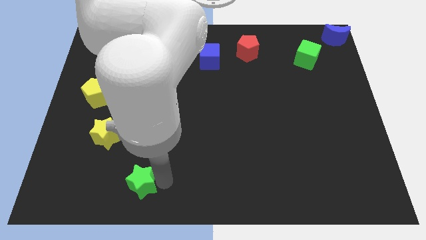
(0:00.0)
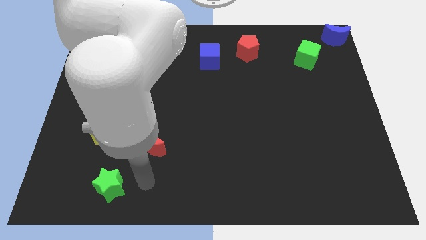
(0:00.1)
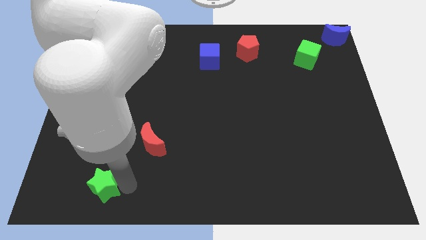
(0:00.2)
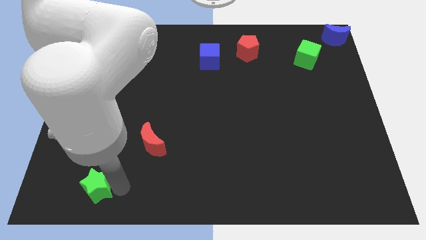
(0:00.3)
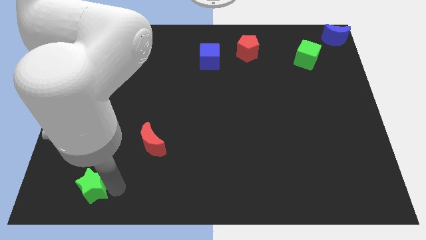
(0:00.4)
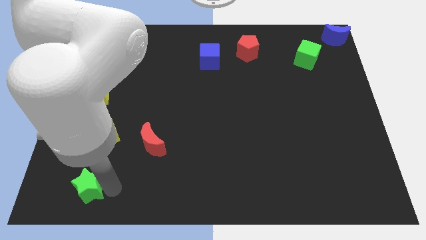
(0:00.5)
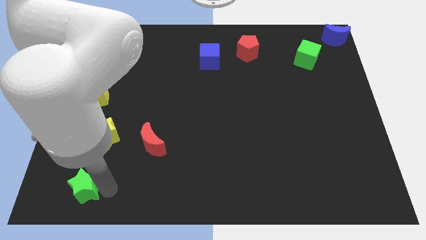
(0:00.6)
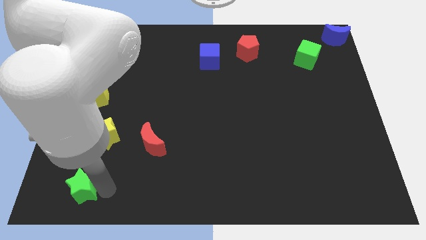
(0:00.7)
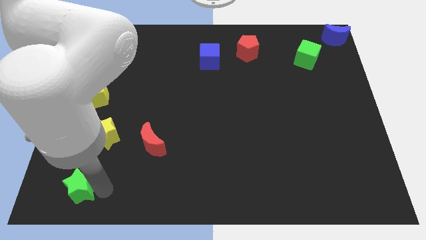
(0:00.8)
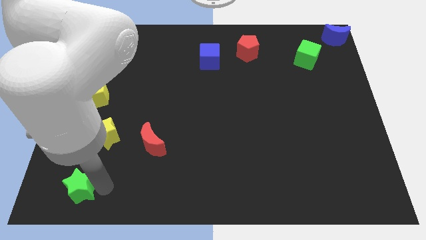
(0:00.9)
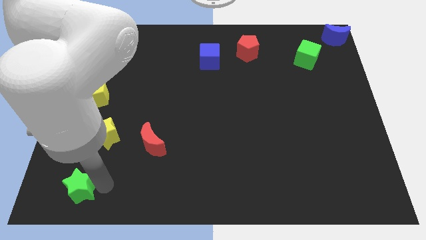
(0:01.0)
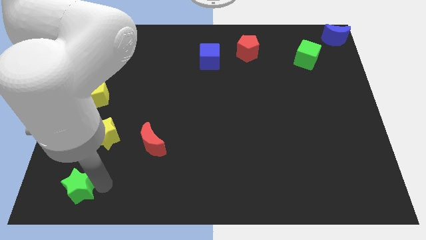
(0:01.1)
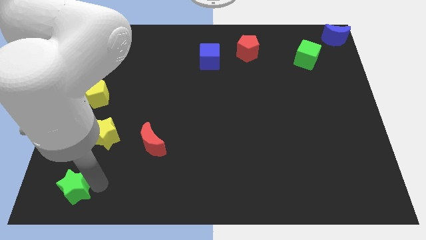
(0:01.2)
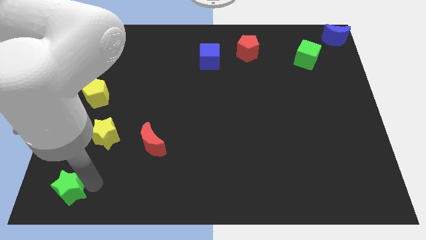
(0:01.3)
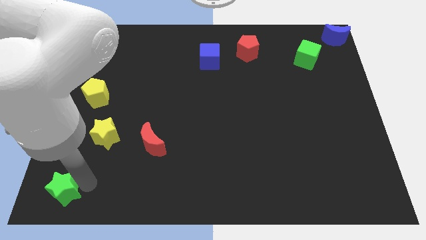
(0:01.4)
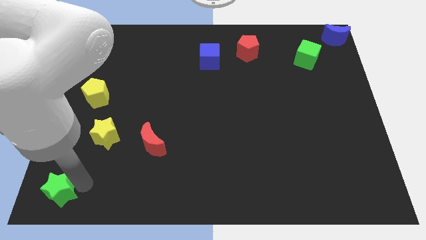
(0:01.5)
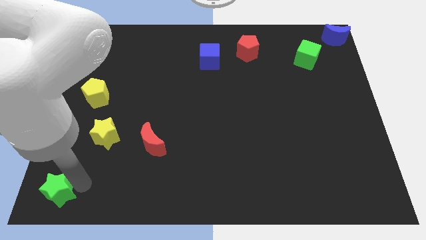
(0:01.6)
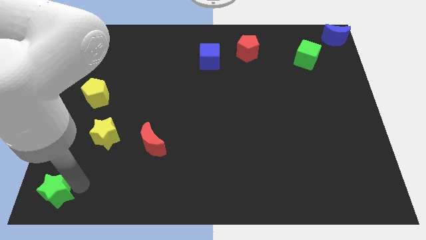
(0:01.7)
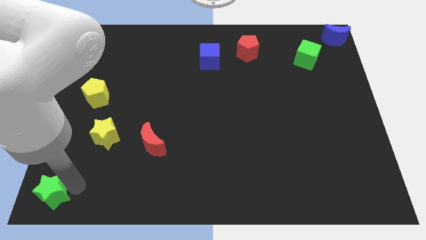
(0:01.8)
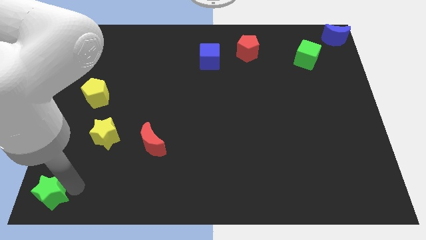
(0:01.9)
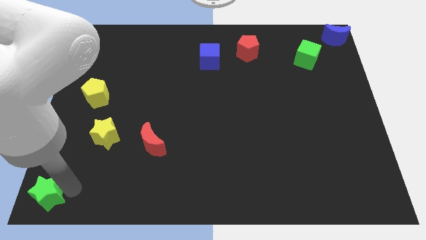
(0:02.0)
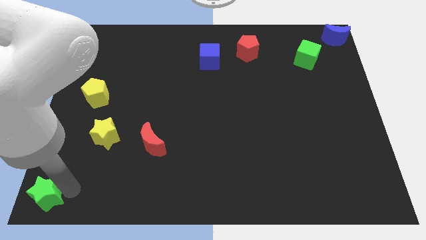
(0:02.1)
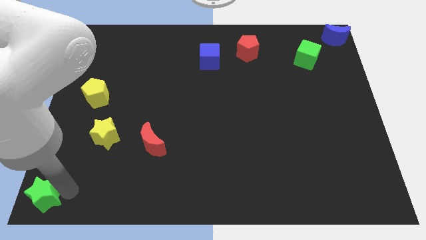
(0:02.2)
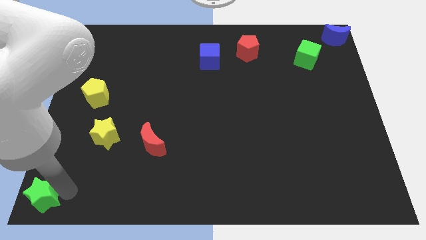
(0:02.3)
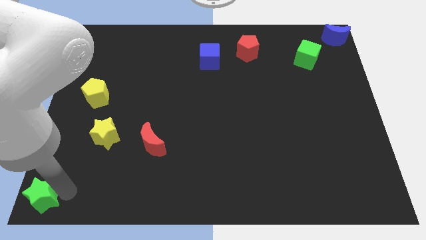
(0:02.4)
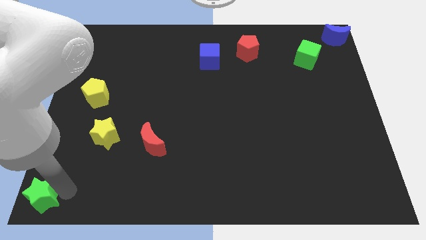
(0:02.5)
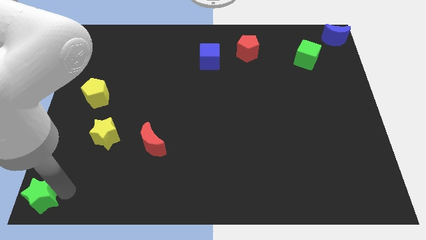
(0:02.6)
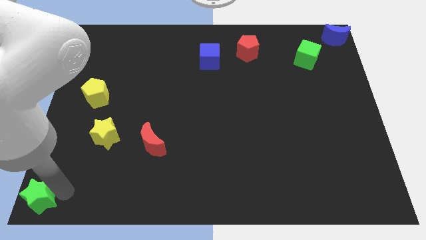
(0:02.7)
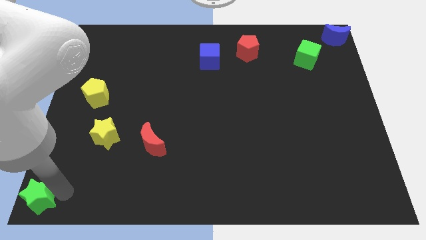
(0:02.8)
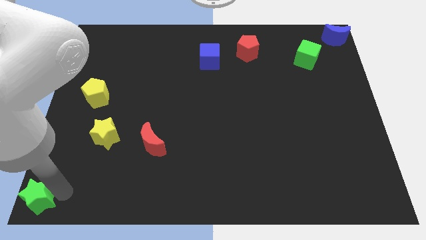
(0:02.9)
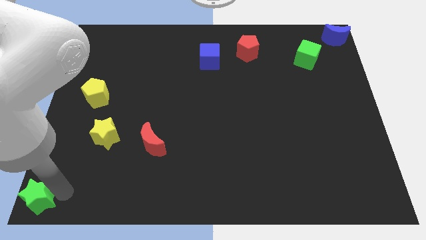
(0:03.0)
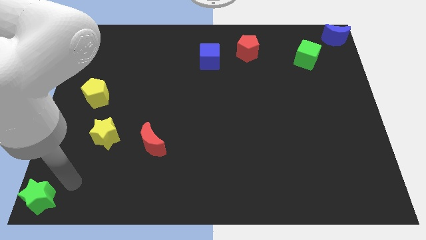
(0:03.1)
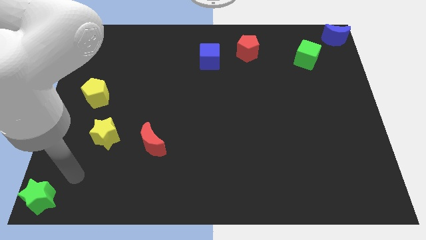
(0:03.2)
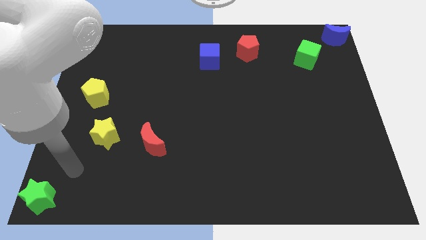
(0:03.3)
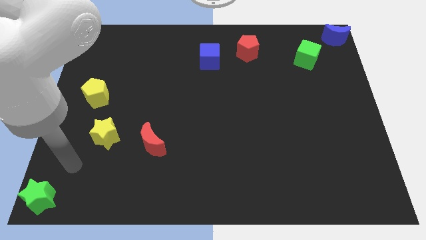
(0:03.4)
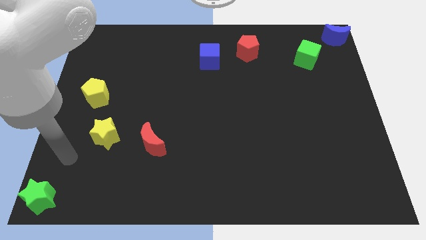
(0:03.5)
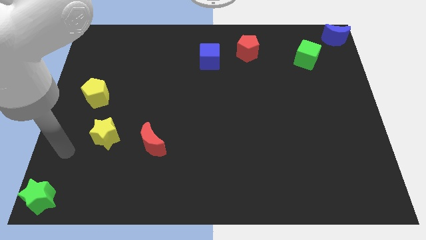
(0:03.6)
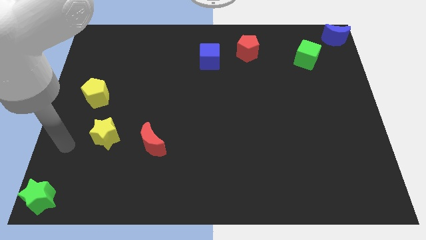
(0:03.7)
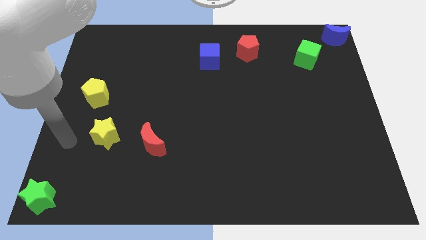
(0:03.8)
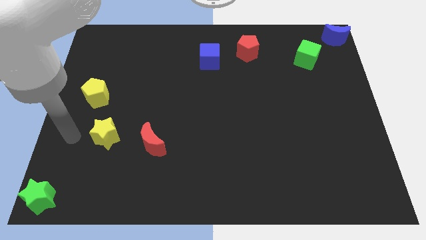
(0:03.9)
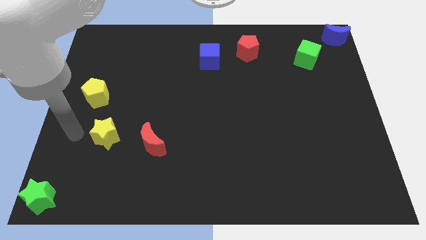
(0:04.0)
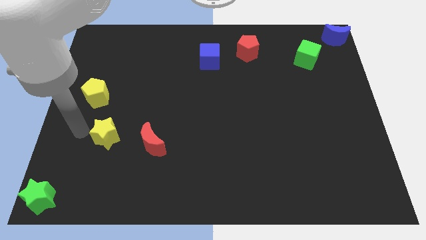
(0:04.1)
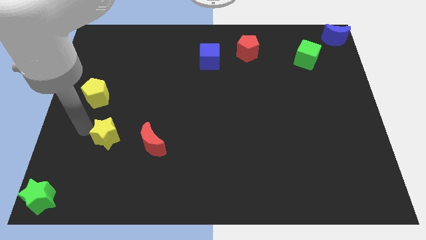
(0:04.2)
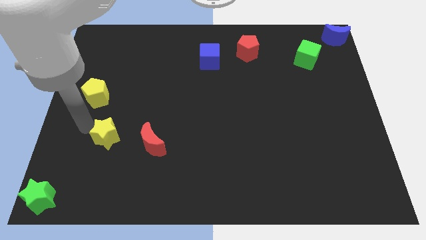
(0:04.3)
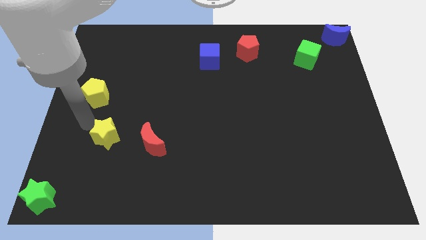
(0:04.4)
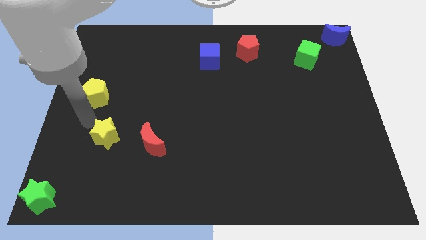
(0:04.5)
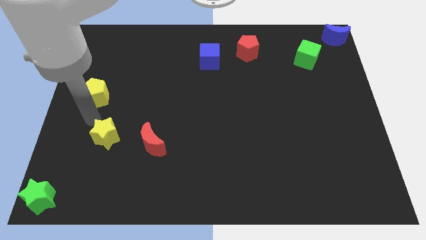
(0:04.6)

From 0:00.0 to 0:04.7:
place the green star at the bottom left corner of the board

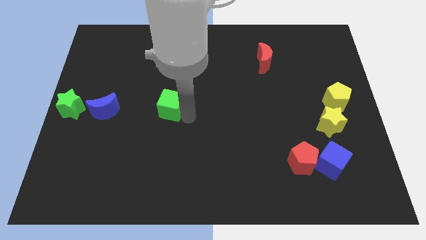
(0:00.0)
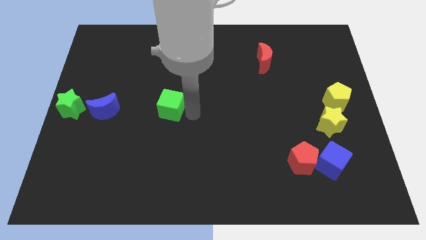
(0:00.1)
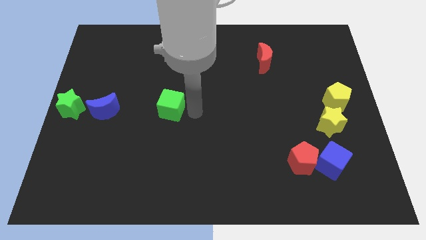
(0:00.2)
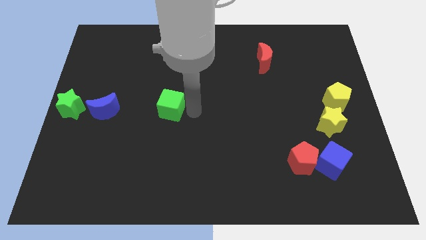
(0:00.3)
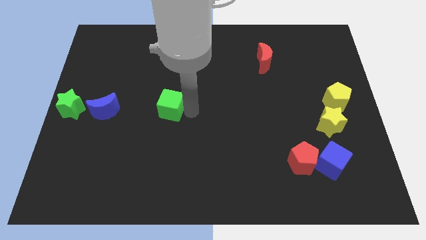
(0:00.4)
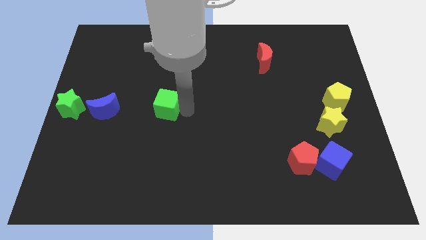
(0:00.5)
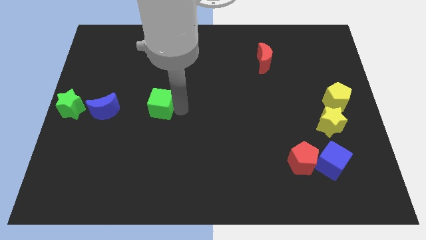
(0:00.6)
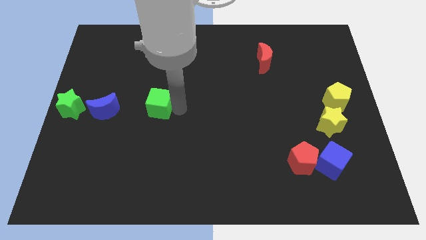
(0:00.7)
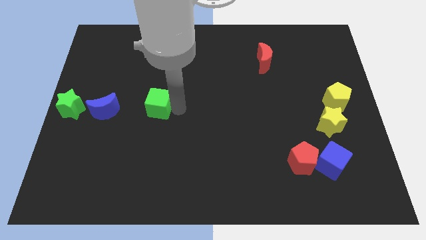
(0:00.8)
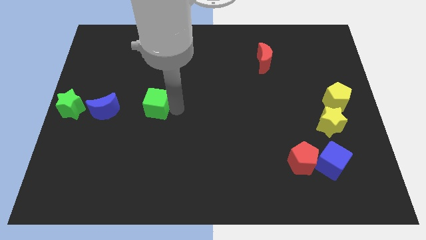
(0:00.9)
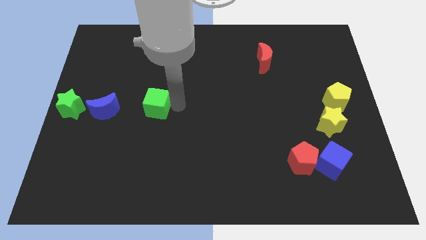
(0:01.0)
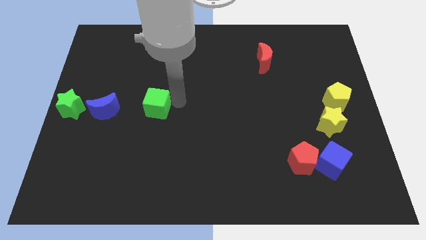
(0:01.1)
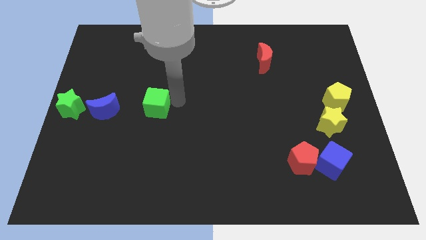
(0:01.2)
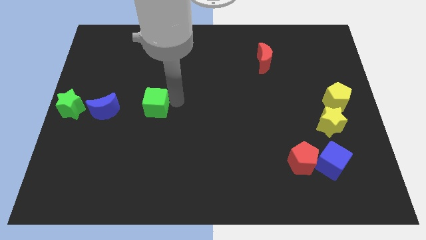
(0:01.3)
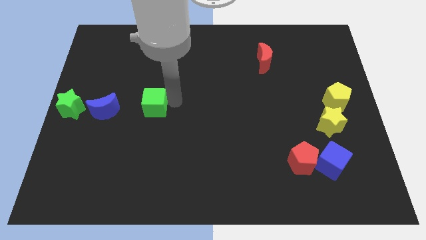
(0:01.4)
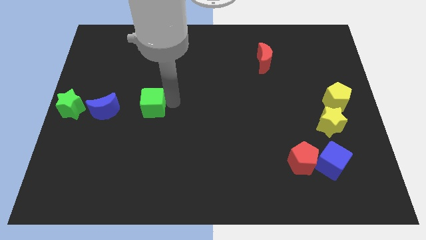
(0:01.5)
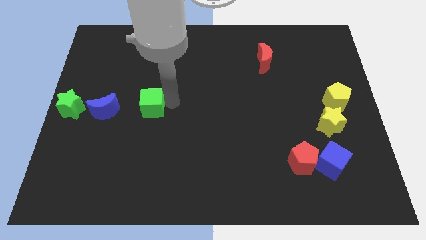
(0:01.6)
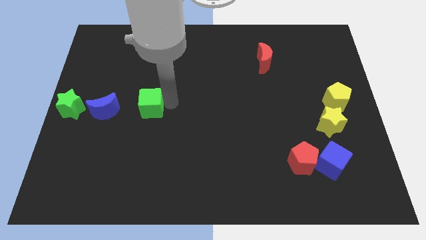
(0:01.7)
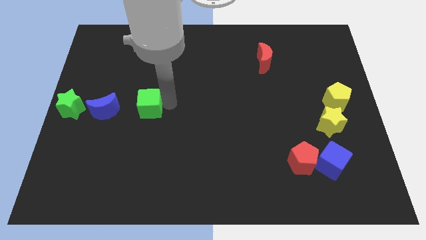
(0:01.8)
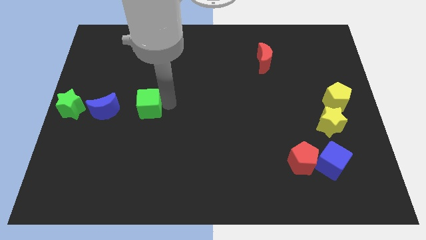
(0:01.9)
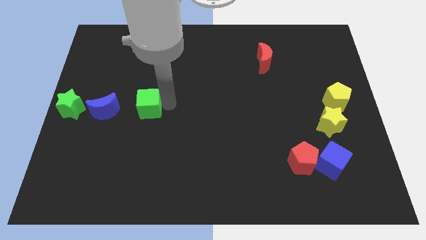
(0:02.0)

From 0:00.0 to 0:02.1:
move the green cube to the left of blue crescent

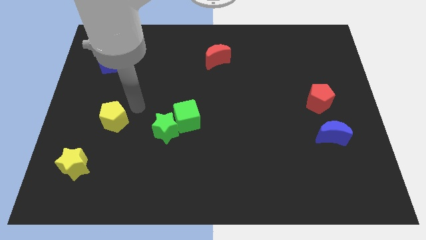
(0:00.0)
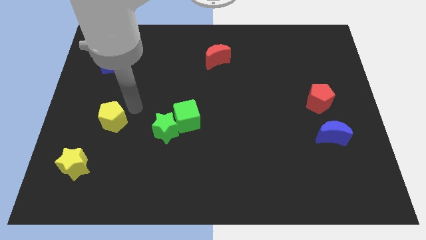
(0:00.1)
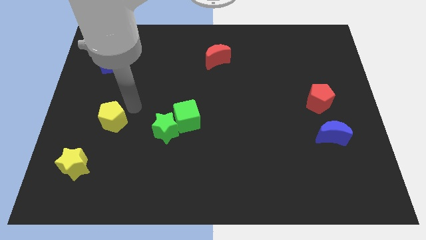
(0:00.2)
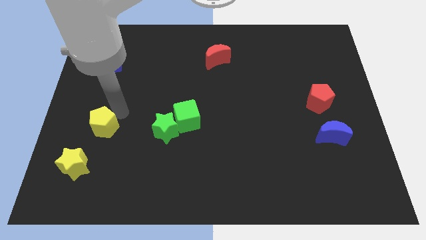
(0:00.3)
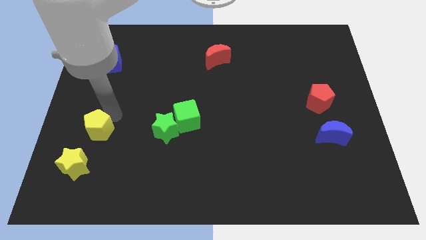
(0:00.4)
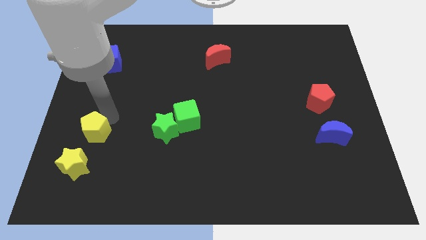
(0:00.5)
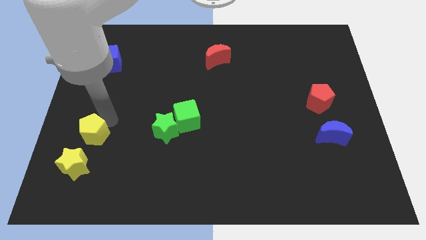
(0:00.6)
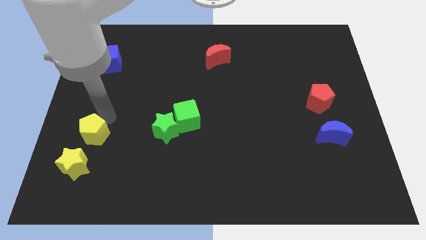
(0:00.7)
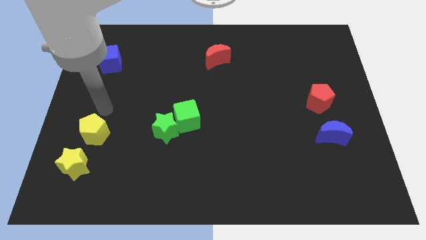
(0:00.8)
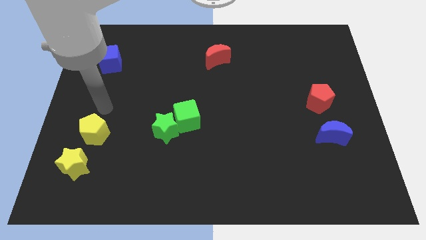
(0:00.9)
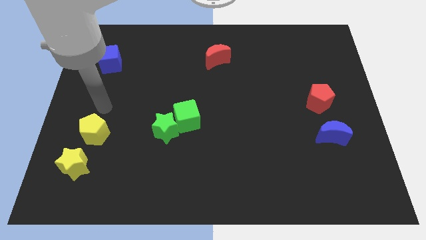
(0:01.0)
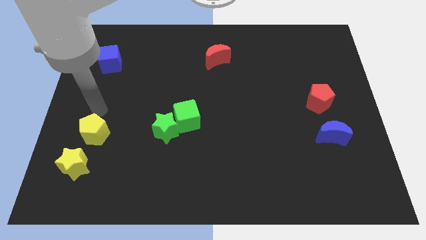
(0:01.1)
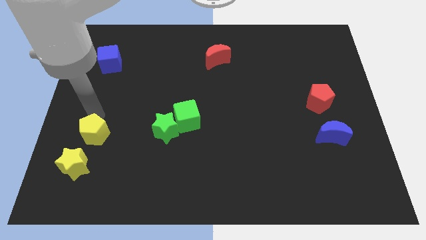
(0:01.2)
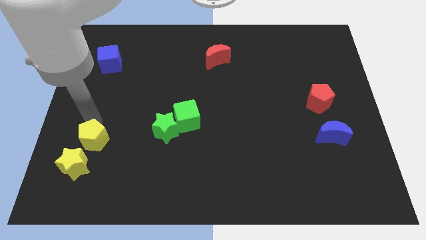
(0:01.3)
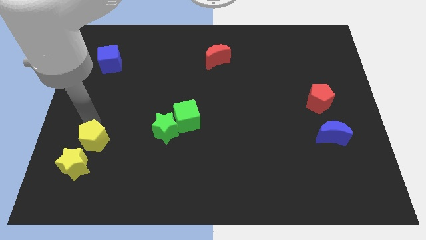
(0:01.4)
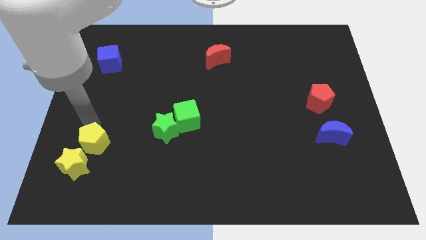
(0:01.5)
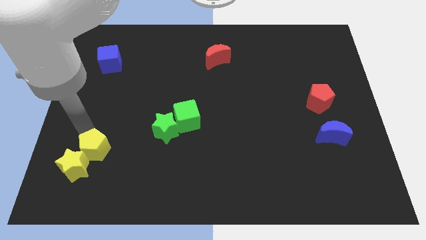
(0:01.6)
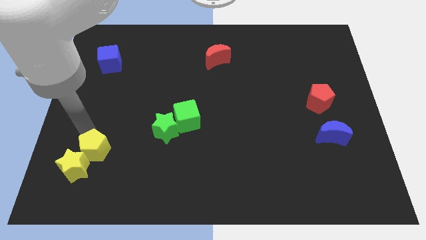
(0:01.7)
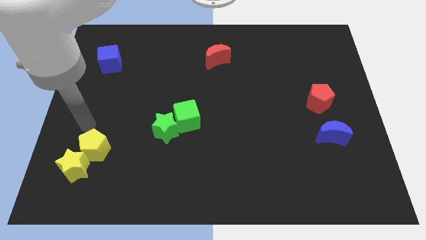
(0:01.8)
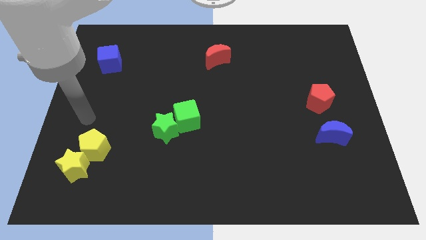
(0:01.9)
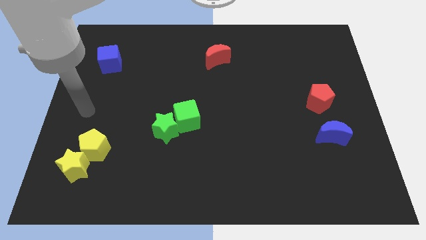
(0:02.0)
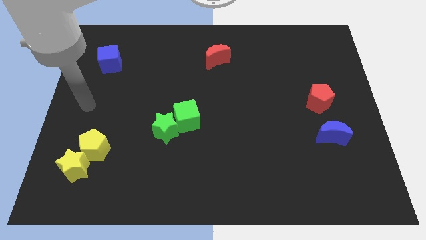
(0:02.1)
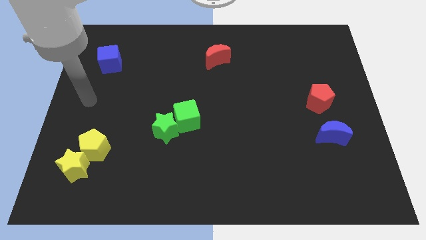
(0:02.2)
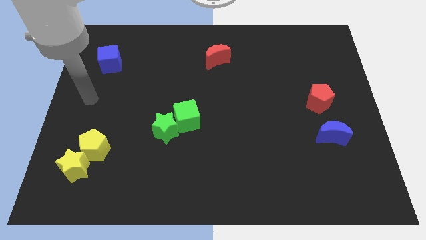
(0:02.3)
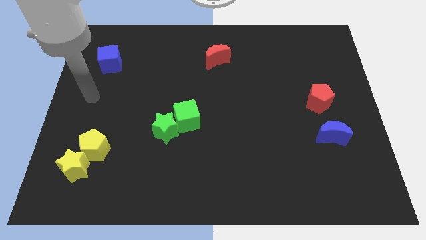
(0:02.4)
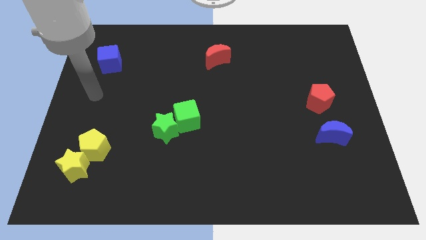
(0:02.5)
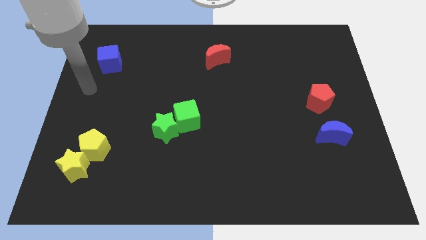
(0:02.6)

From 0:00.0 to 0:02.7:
push the yellow pentagon and place it above the yellow star
